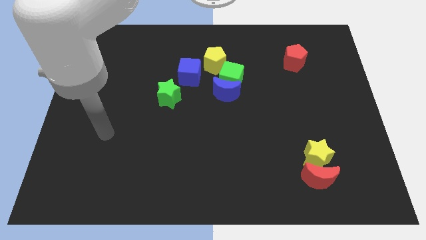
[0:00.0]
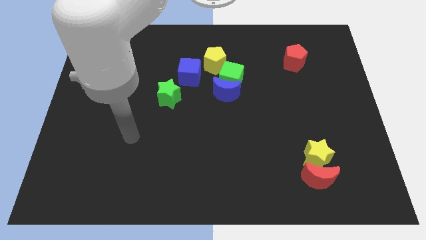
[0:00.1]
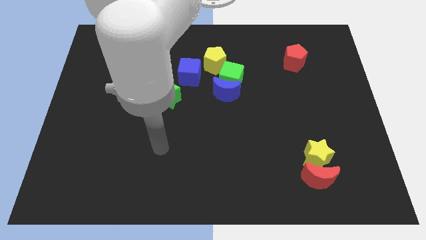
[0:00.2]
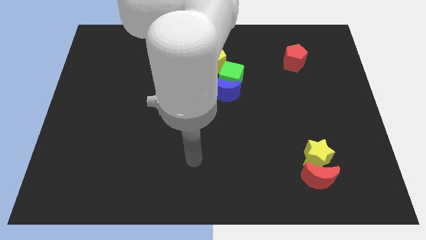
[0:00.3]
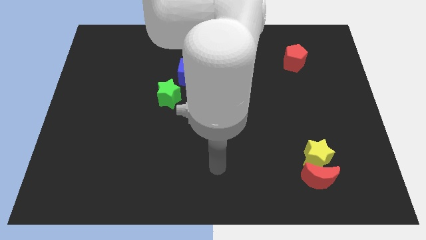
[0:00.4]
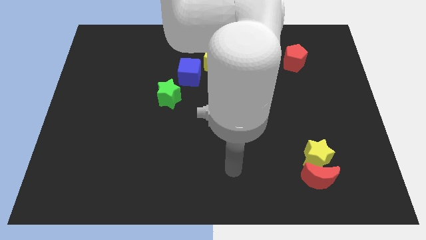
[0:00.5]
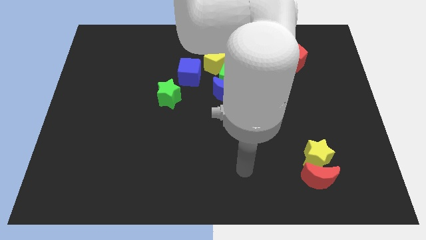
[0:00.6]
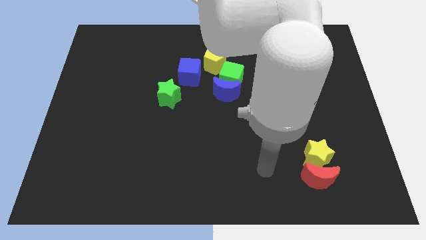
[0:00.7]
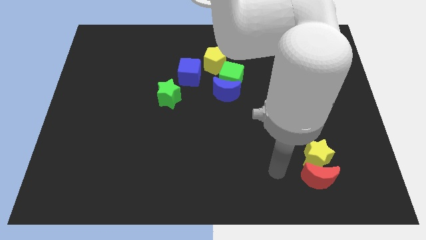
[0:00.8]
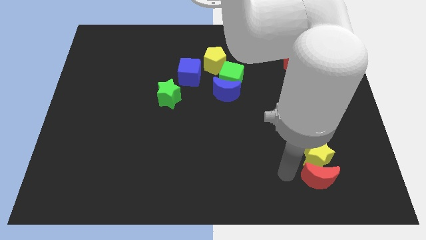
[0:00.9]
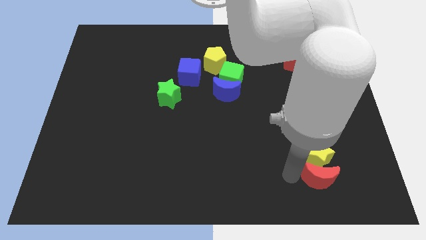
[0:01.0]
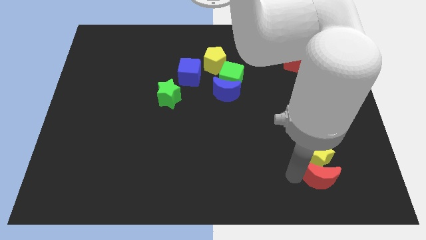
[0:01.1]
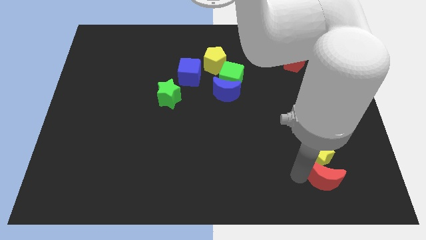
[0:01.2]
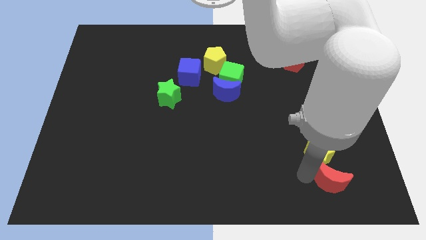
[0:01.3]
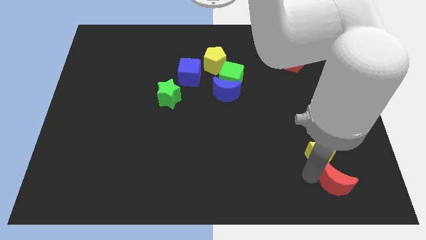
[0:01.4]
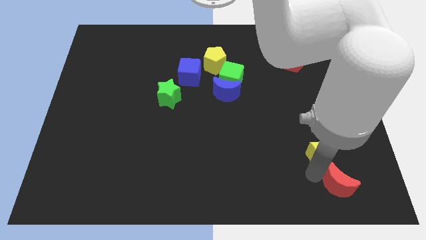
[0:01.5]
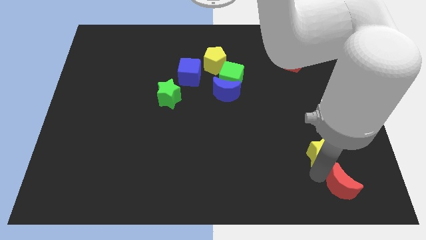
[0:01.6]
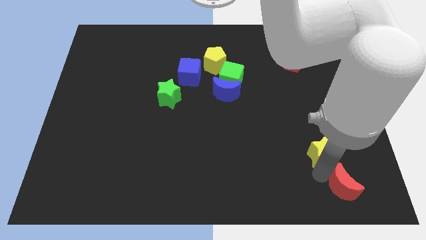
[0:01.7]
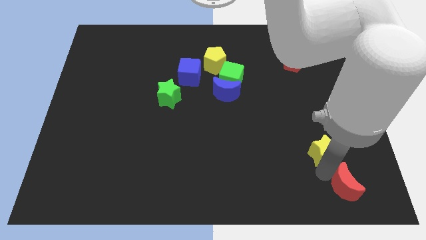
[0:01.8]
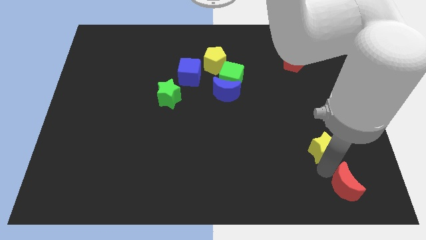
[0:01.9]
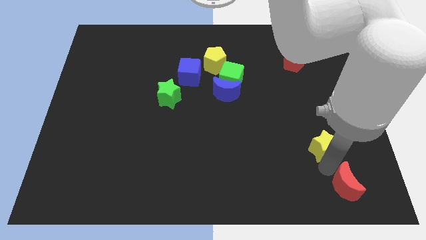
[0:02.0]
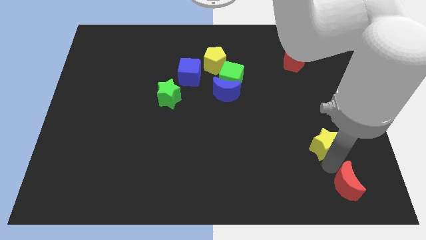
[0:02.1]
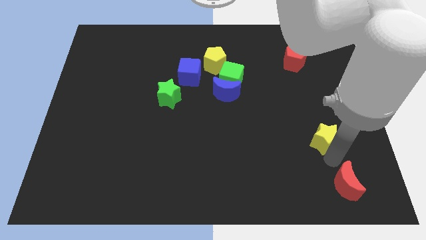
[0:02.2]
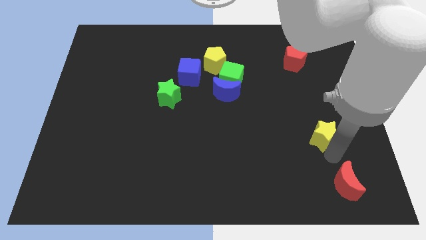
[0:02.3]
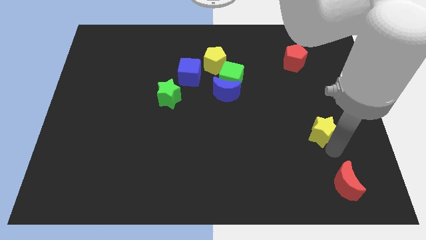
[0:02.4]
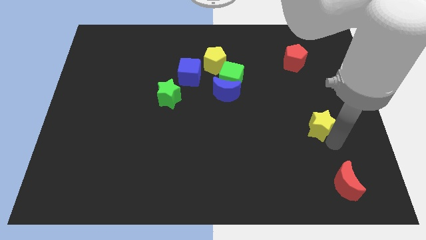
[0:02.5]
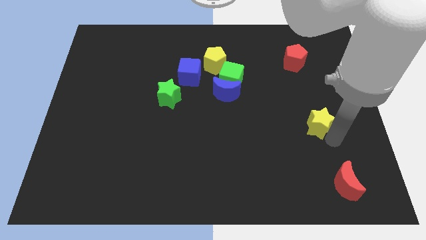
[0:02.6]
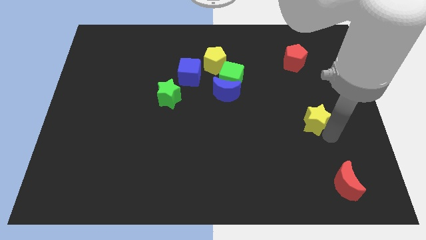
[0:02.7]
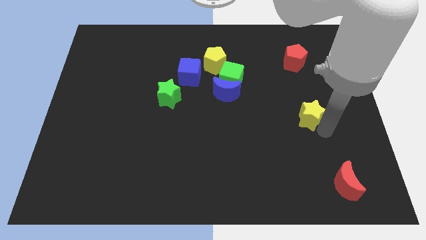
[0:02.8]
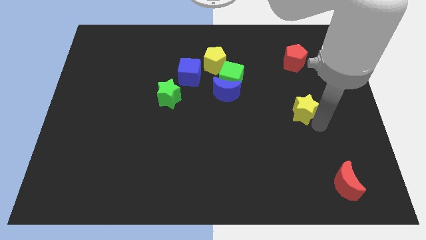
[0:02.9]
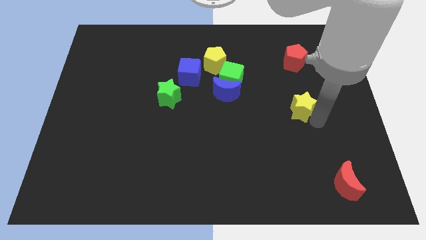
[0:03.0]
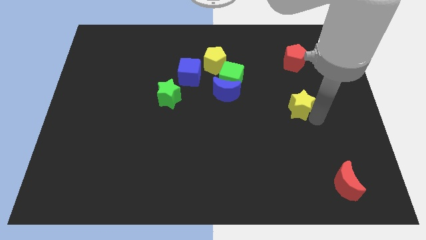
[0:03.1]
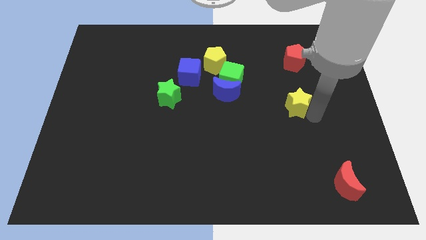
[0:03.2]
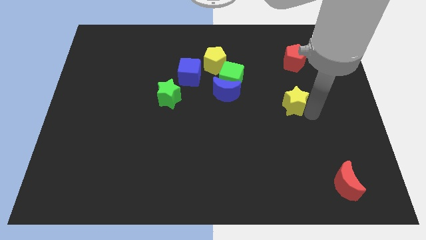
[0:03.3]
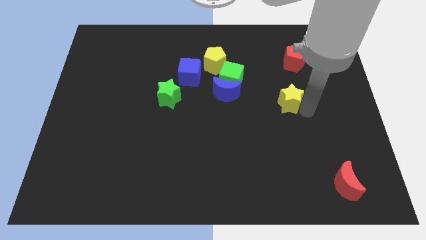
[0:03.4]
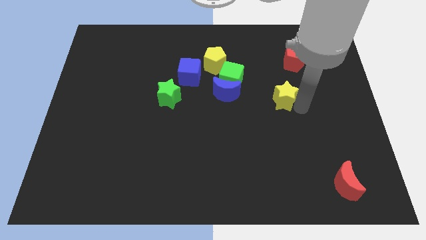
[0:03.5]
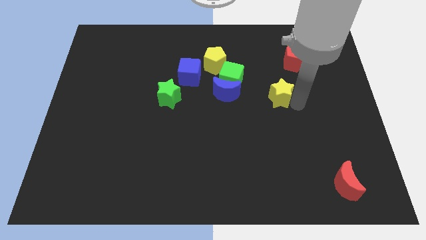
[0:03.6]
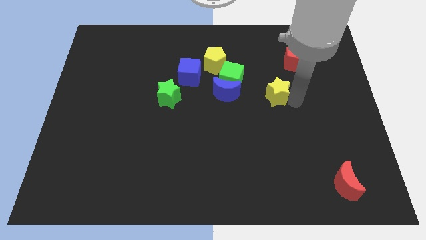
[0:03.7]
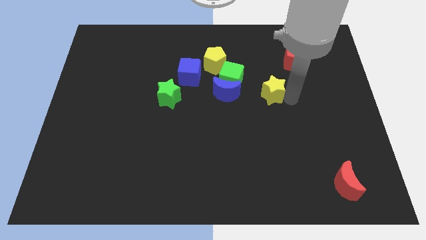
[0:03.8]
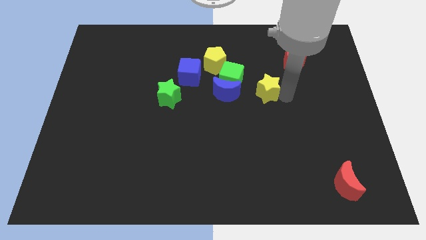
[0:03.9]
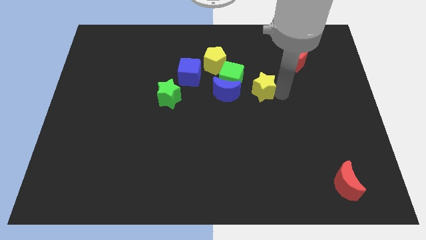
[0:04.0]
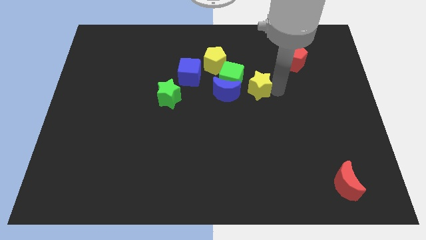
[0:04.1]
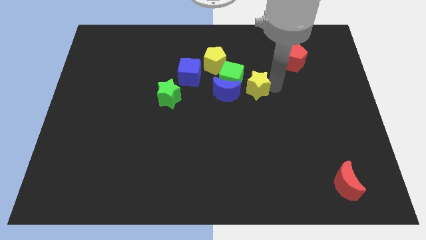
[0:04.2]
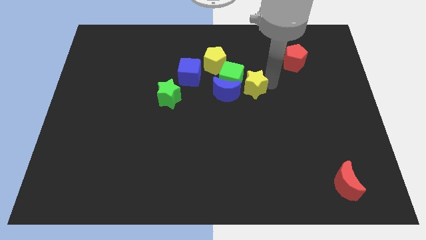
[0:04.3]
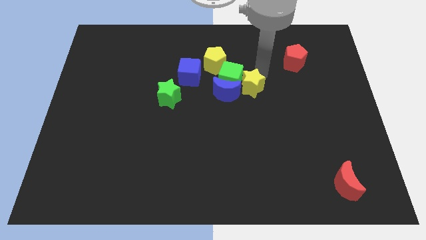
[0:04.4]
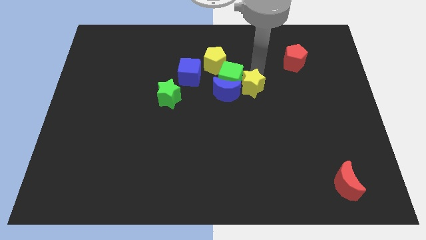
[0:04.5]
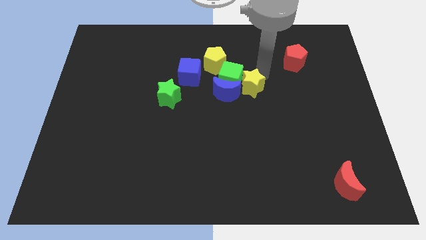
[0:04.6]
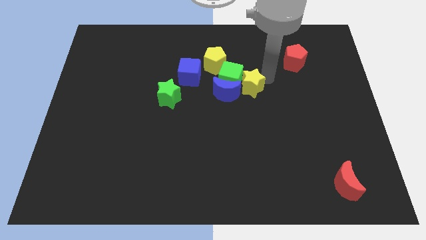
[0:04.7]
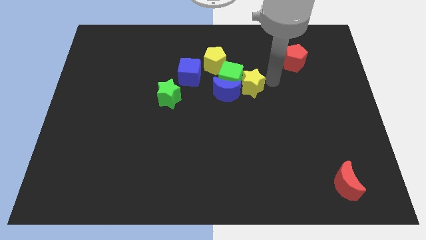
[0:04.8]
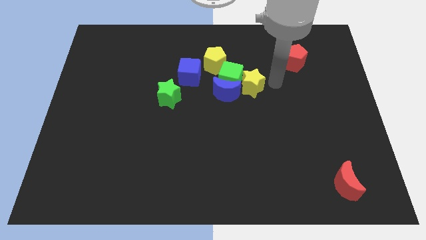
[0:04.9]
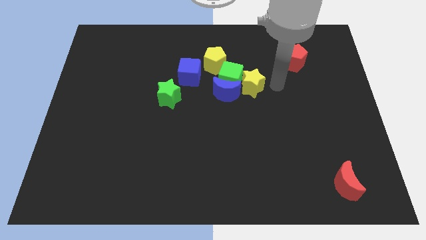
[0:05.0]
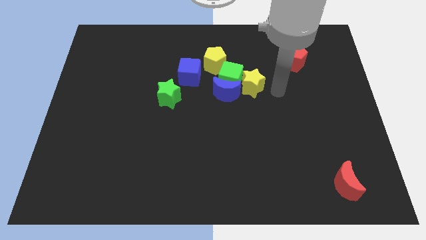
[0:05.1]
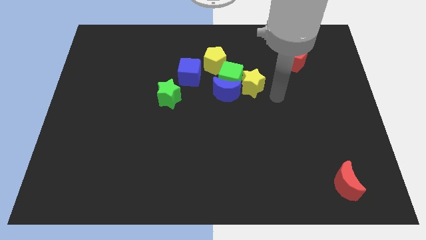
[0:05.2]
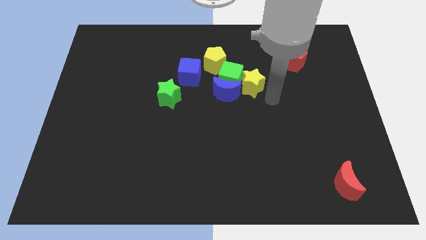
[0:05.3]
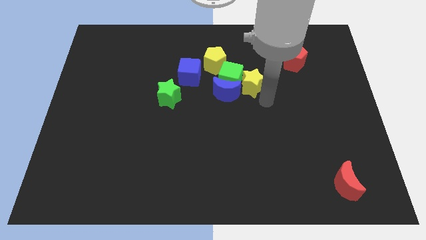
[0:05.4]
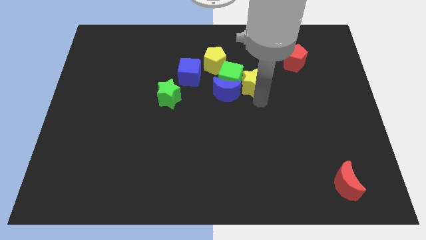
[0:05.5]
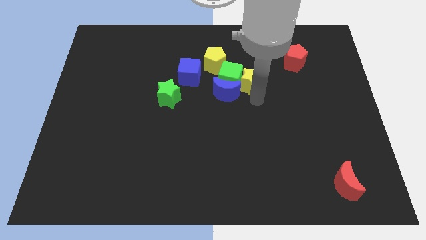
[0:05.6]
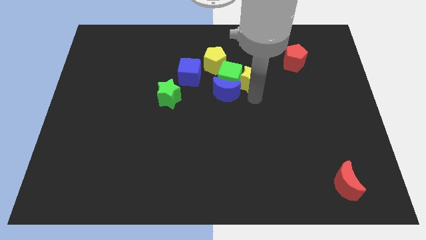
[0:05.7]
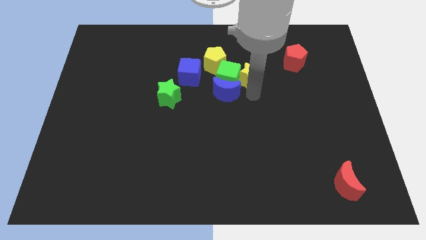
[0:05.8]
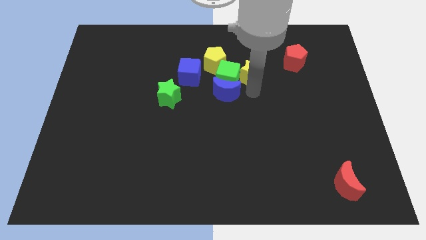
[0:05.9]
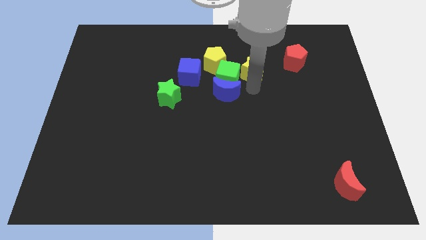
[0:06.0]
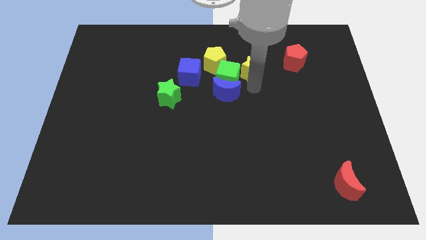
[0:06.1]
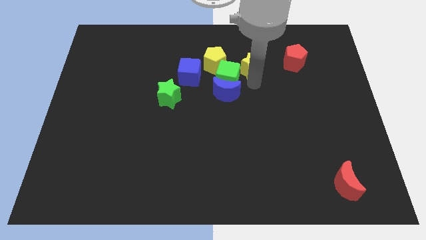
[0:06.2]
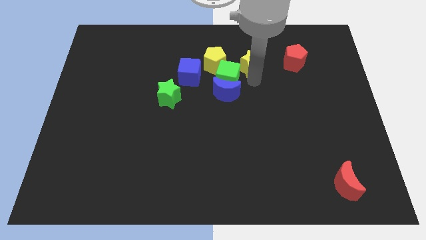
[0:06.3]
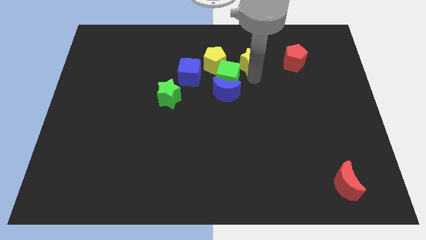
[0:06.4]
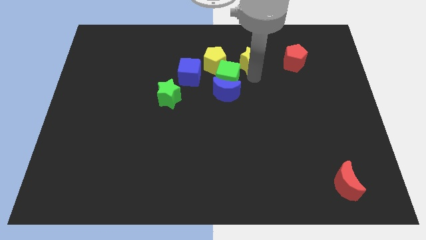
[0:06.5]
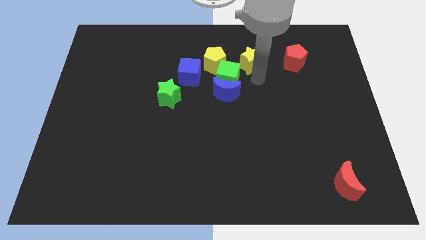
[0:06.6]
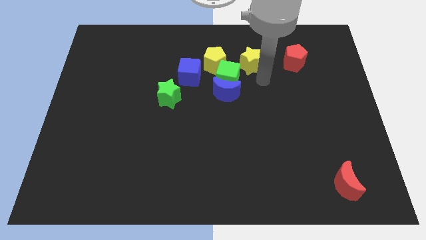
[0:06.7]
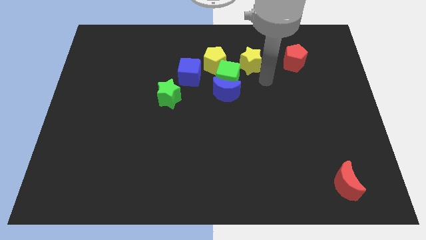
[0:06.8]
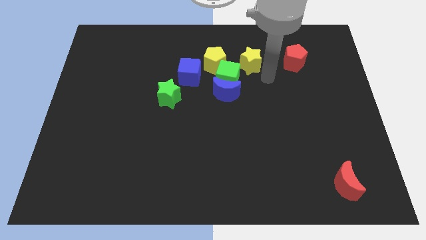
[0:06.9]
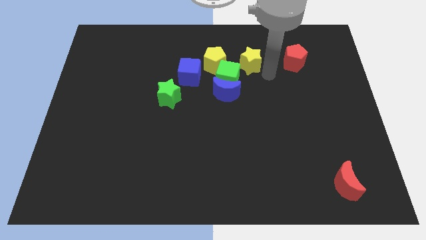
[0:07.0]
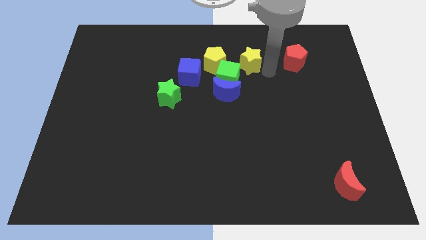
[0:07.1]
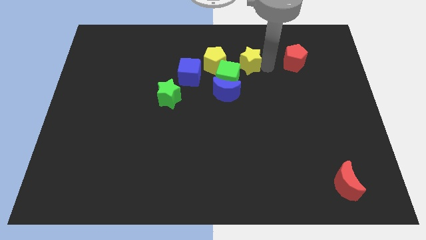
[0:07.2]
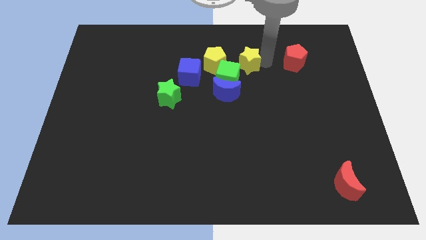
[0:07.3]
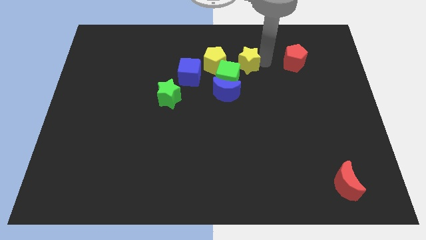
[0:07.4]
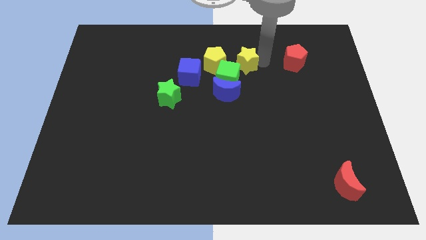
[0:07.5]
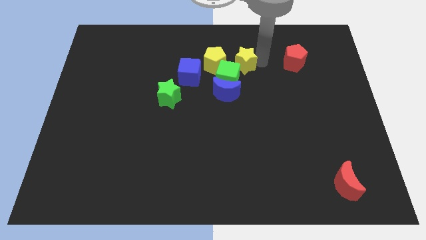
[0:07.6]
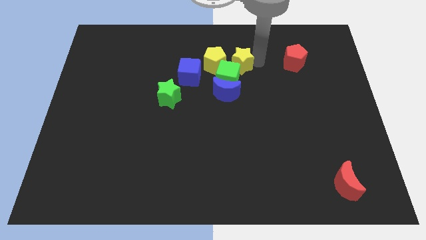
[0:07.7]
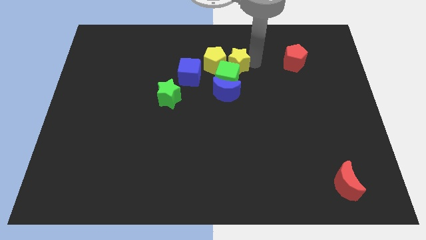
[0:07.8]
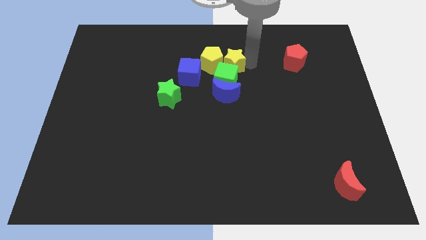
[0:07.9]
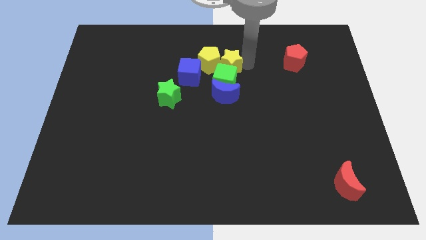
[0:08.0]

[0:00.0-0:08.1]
move the yellow star close to the yellow pentagon

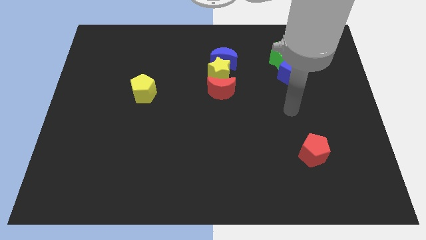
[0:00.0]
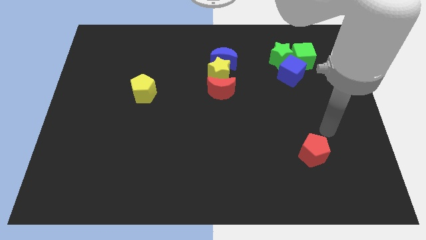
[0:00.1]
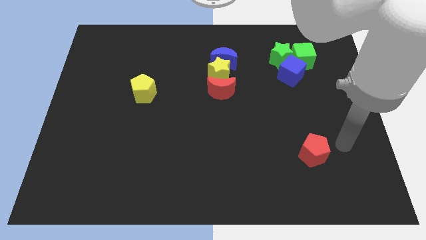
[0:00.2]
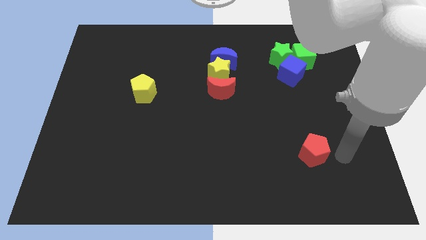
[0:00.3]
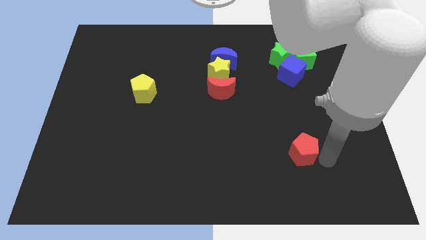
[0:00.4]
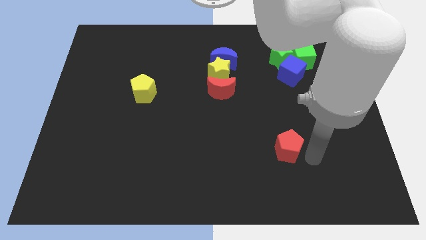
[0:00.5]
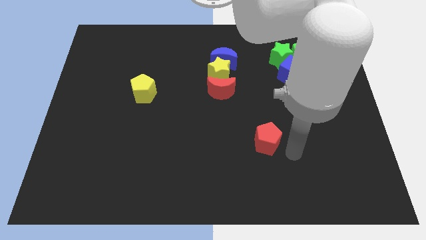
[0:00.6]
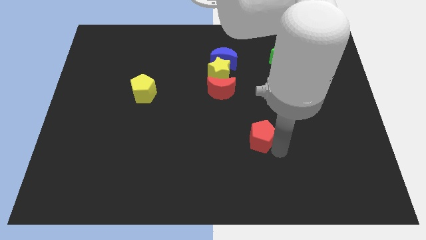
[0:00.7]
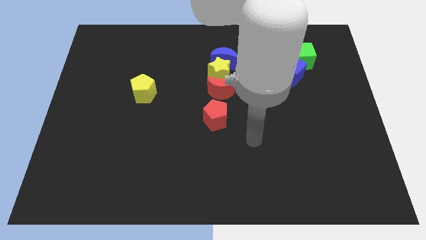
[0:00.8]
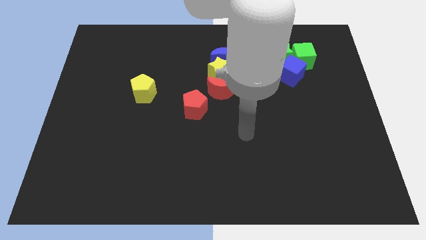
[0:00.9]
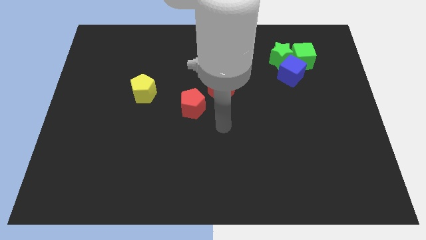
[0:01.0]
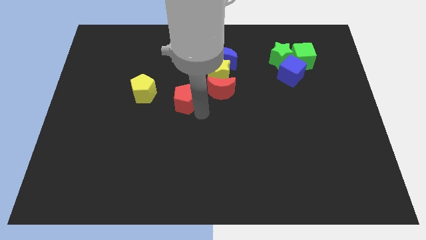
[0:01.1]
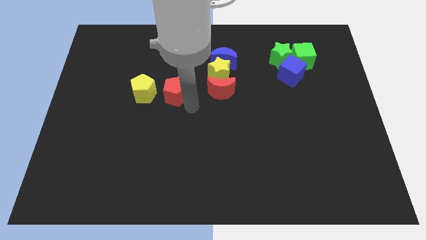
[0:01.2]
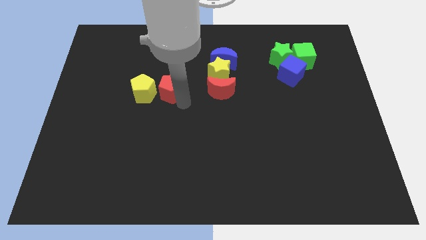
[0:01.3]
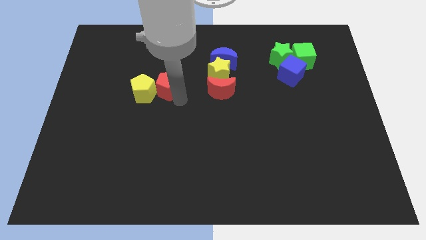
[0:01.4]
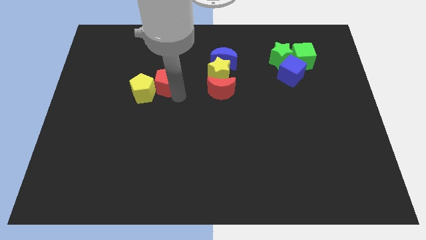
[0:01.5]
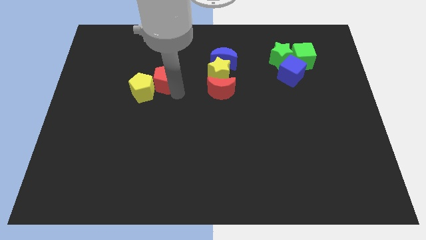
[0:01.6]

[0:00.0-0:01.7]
move the red pentagon towards the yellow pentagon
